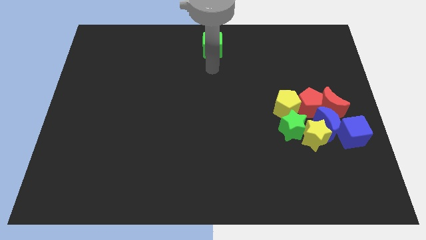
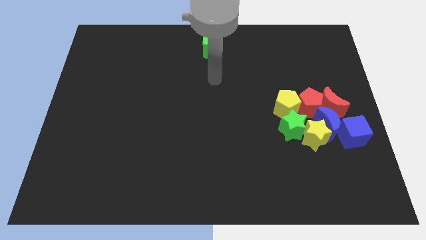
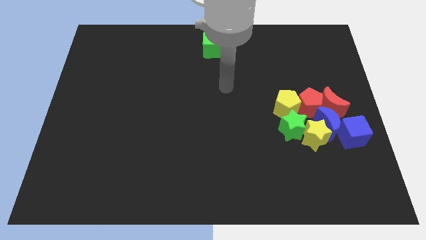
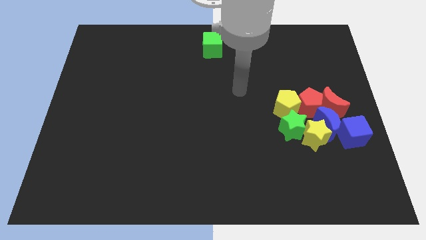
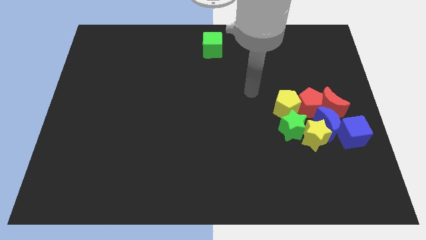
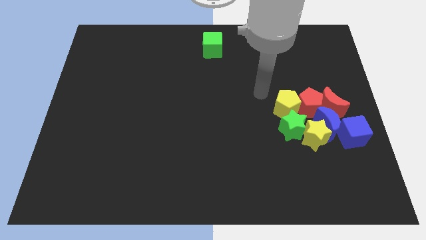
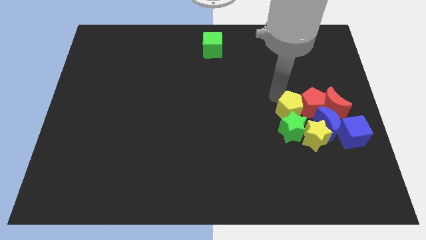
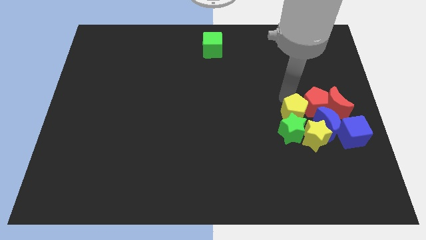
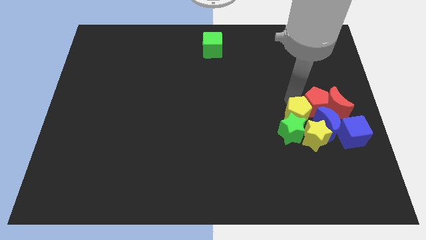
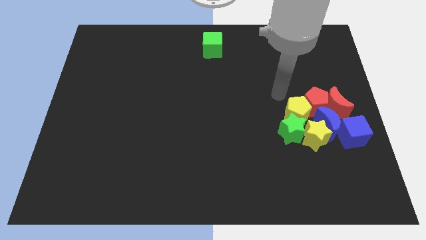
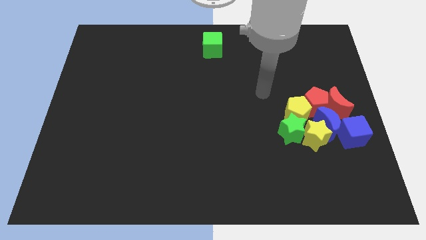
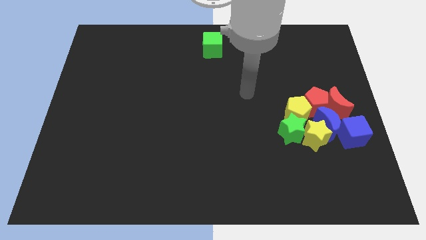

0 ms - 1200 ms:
move the arm into the yellow pentagon

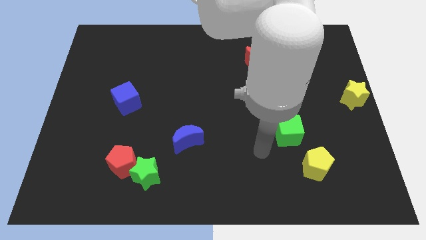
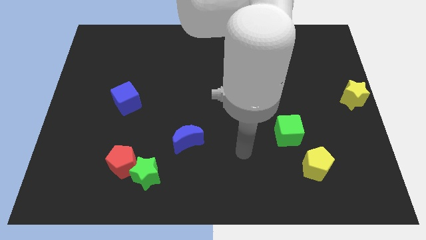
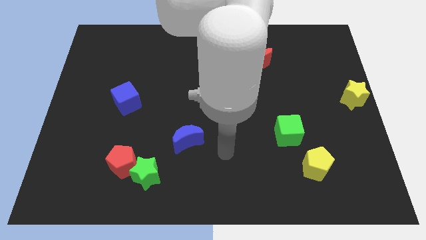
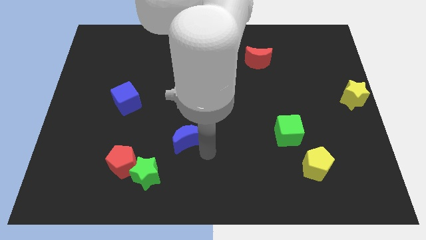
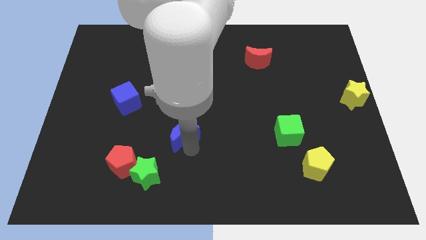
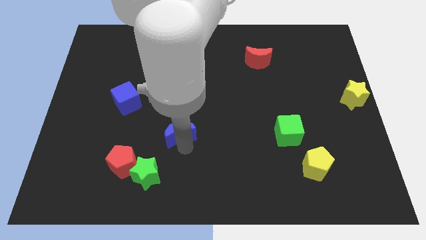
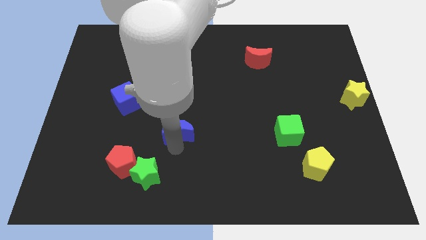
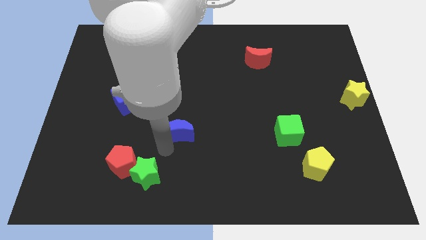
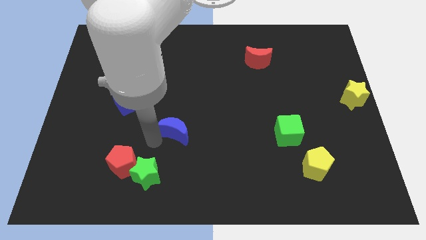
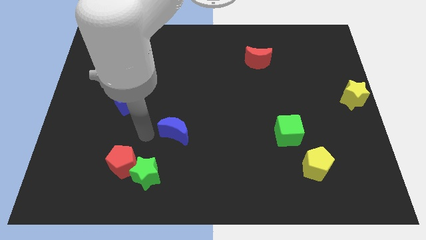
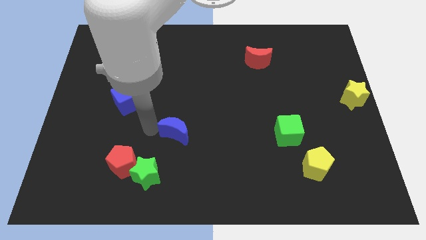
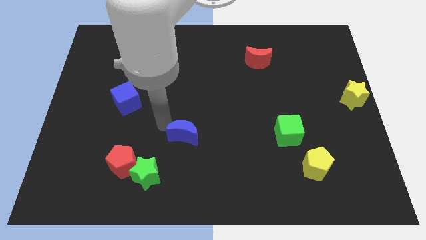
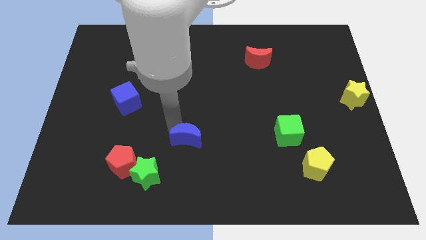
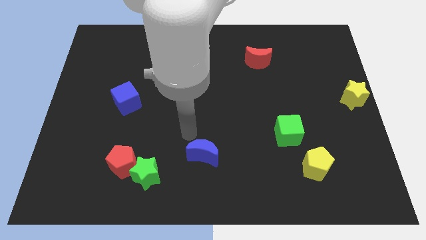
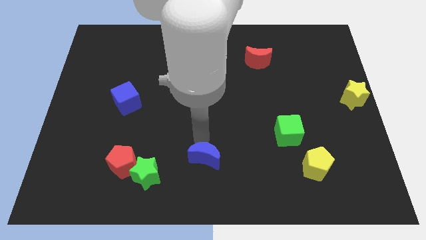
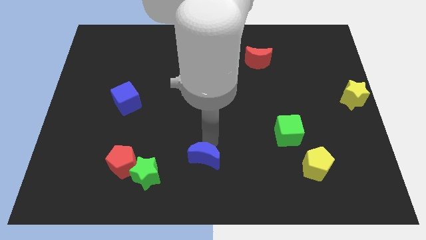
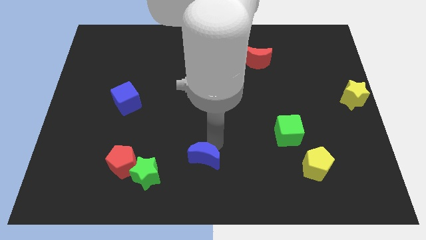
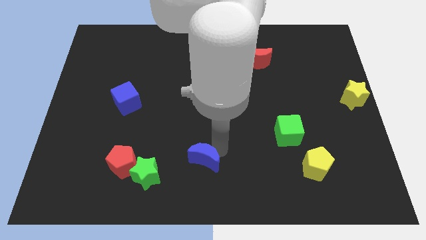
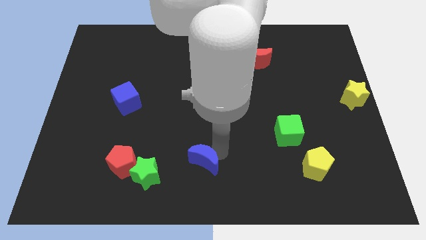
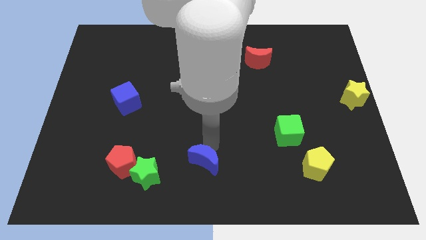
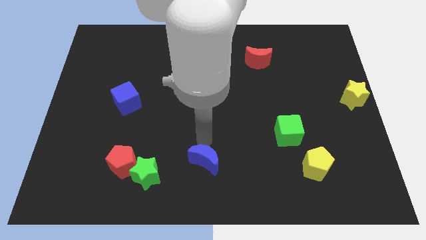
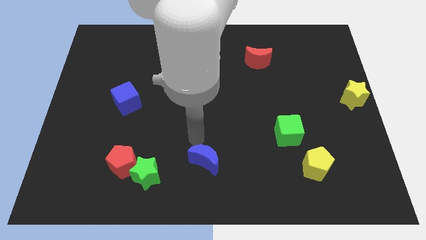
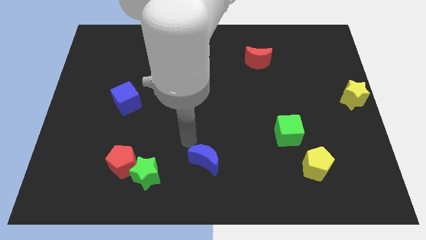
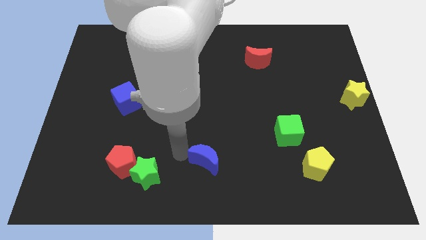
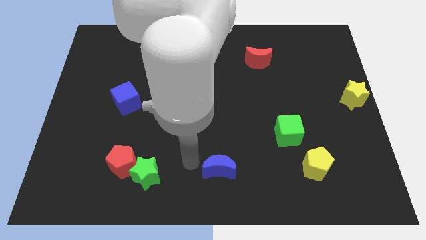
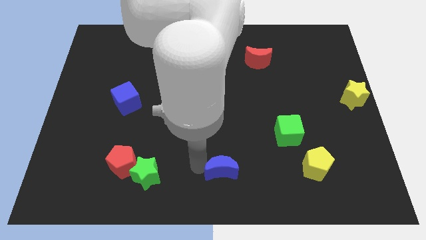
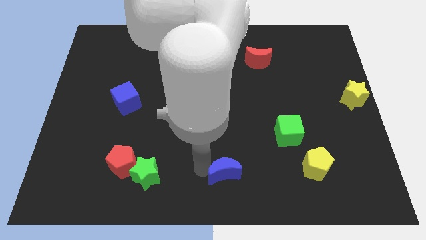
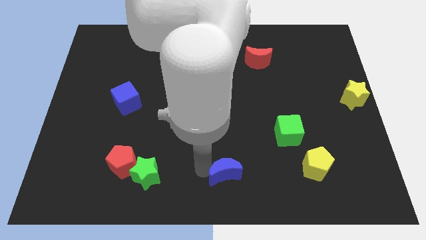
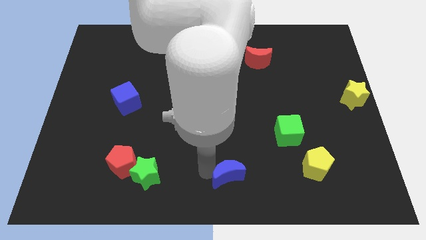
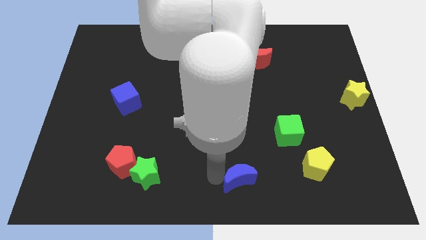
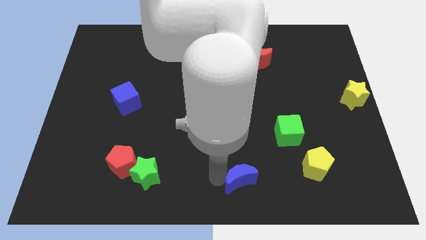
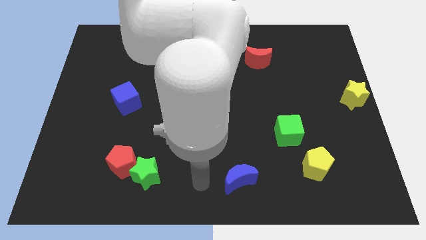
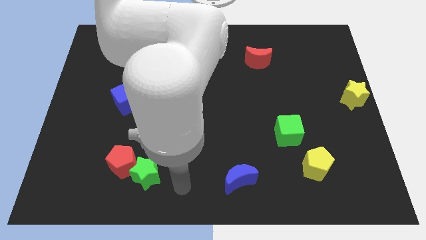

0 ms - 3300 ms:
drag blue moon towards bottom of the board

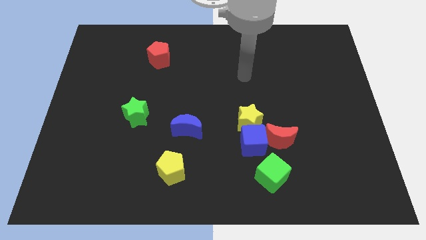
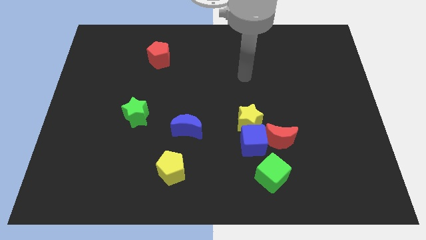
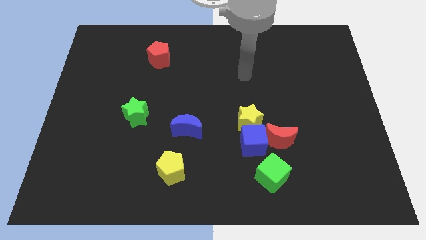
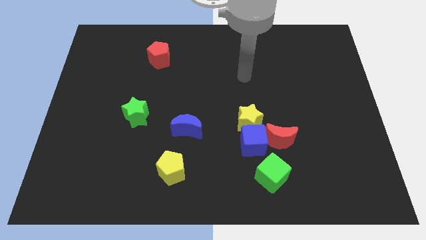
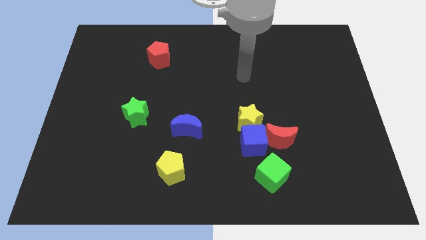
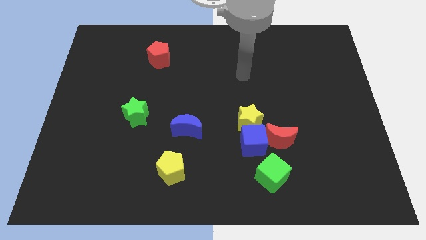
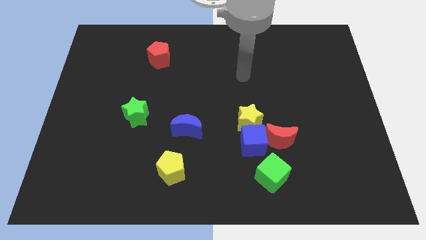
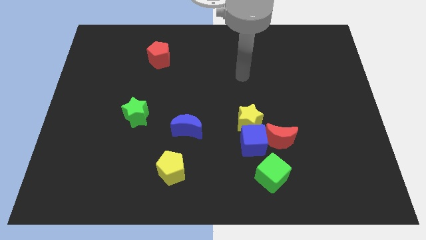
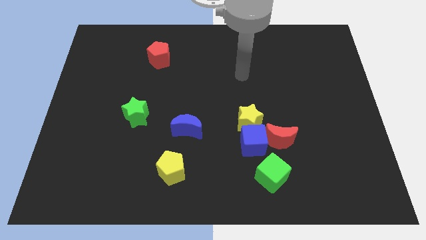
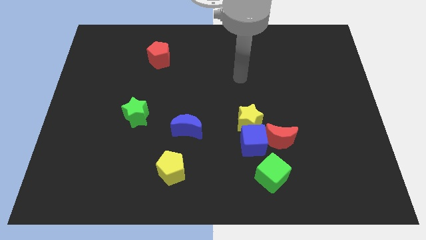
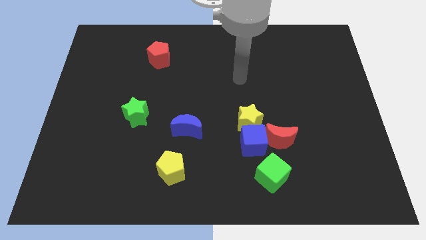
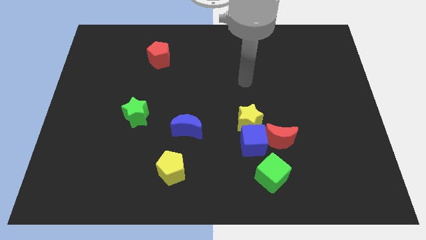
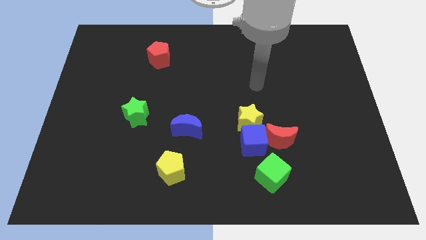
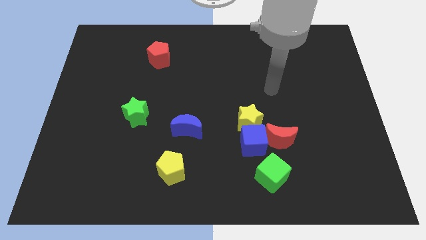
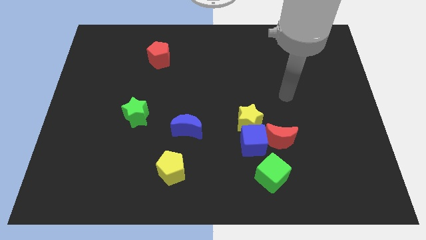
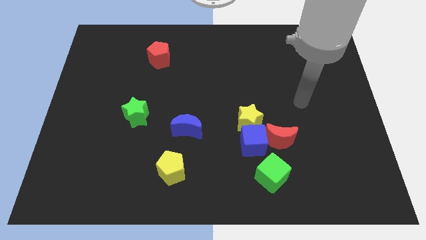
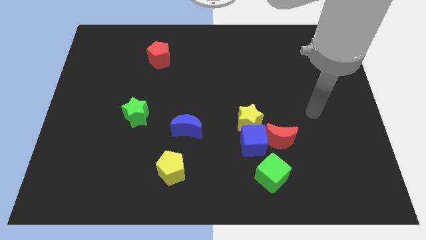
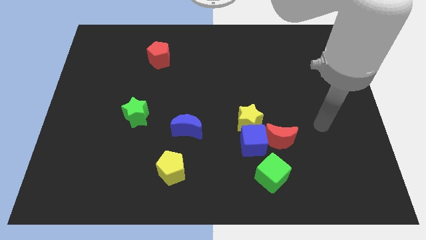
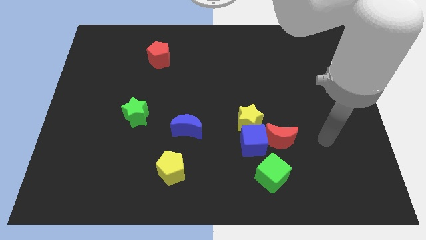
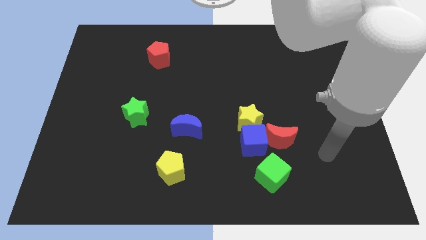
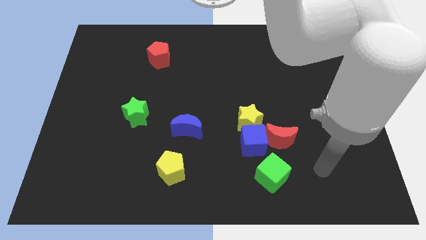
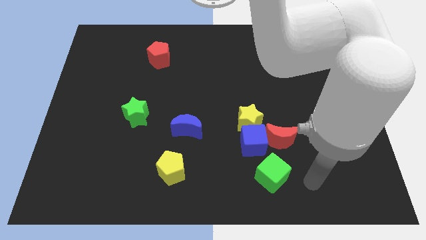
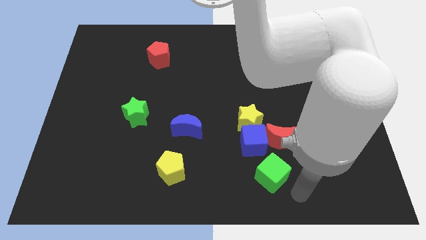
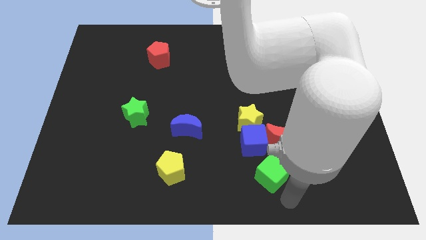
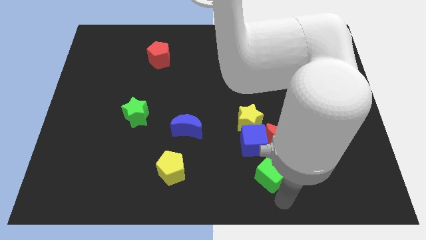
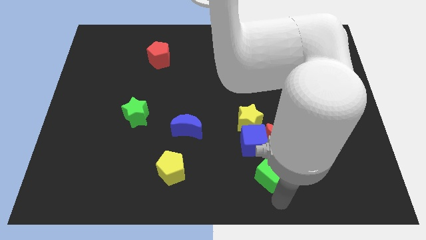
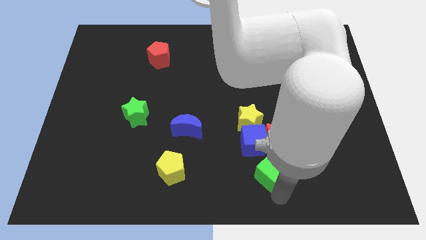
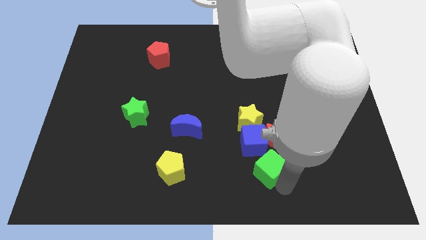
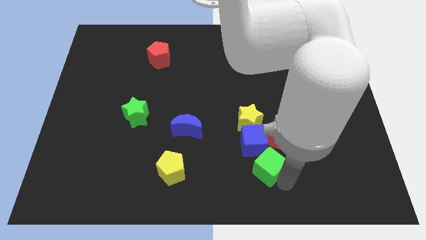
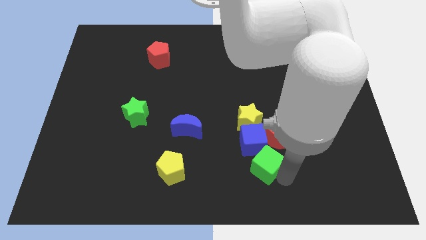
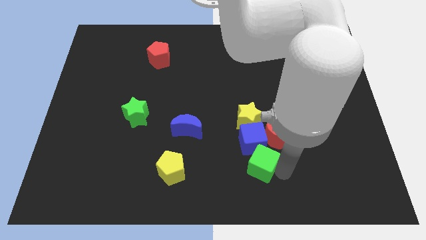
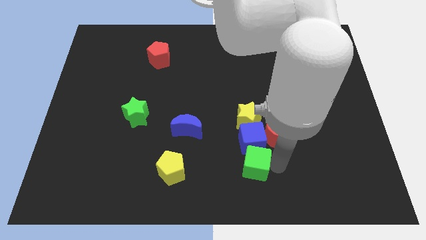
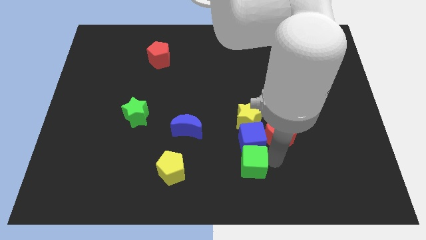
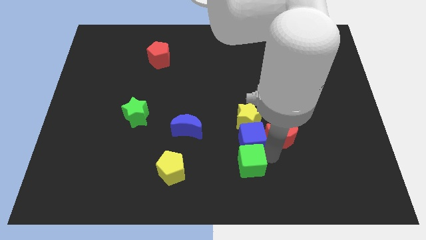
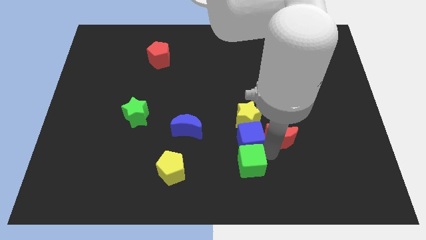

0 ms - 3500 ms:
move the arm towards the green cube

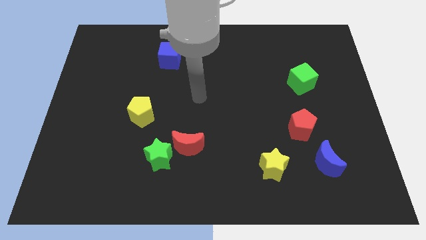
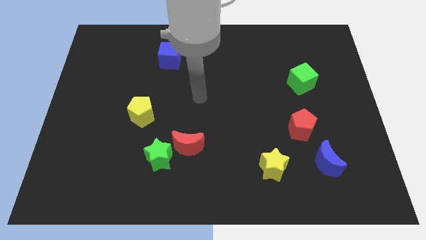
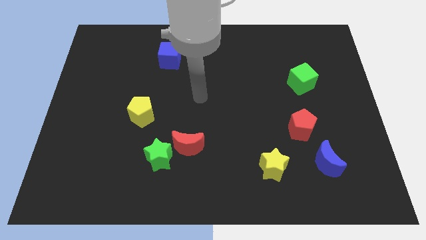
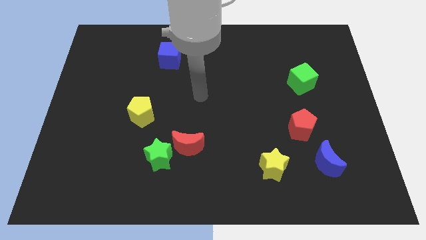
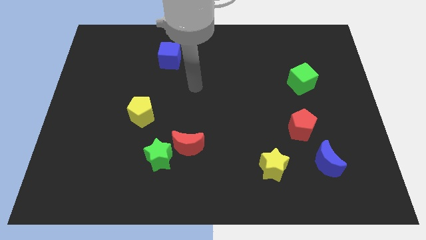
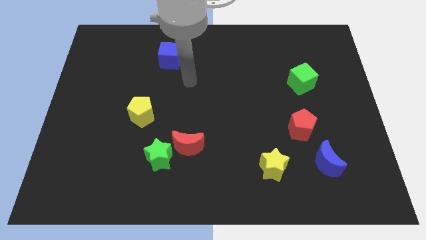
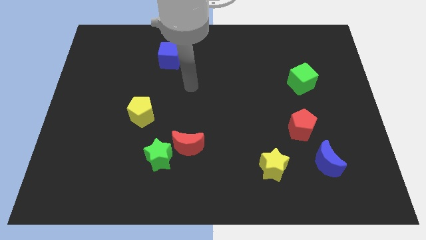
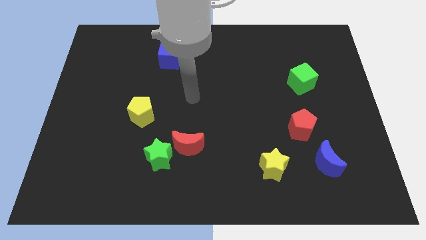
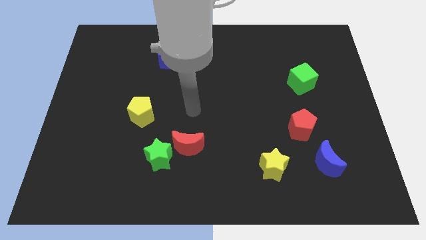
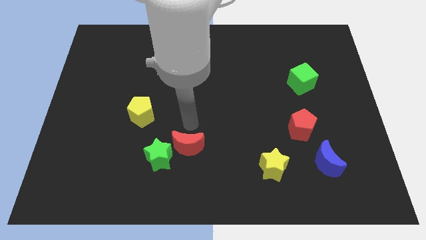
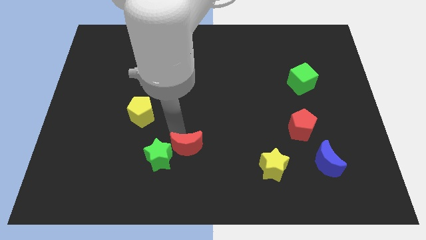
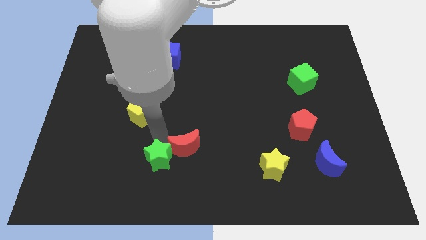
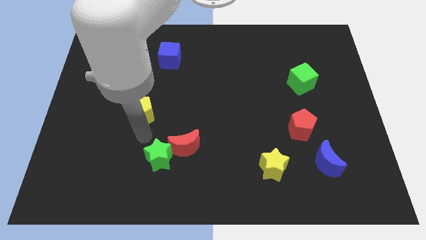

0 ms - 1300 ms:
place your arm in between the yellow pentagon and green star
